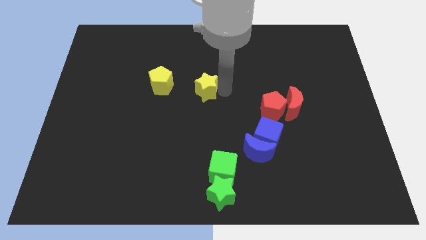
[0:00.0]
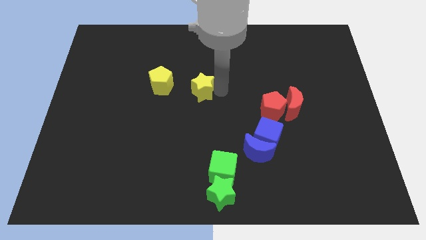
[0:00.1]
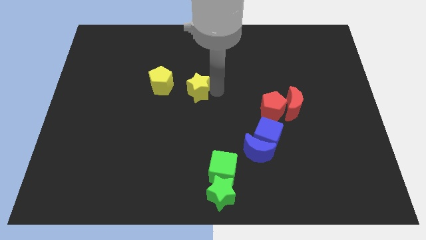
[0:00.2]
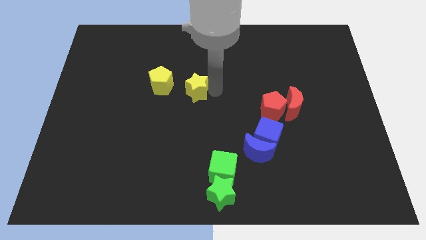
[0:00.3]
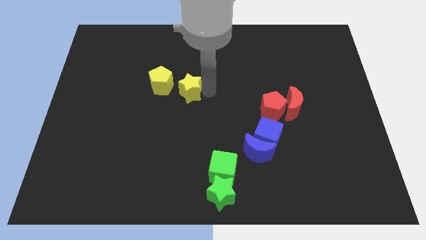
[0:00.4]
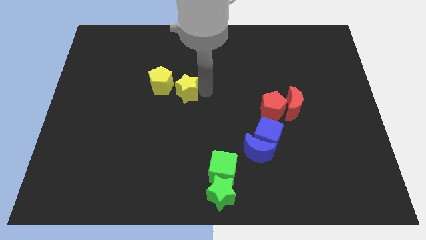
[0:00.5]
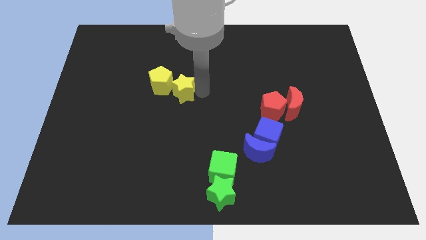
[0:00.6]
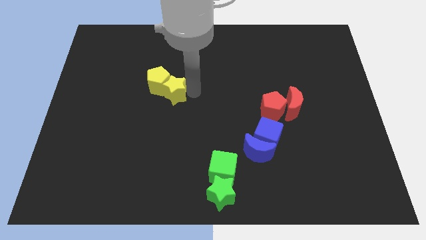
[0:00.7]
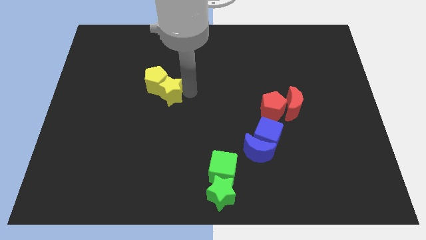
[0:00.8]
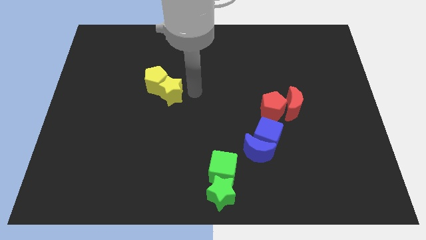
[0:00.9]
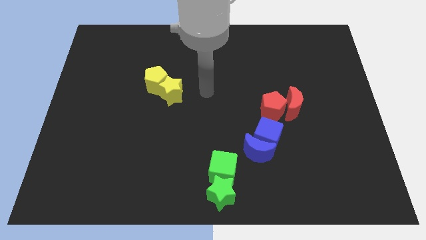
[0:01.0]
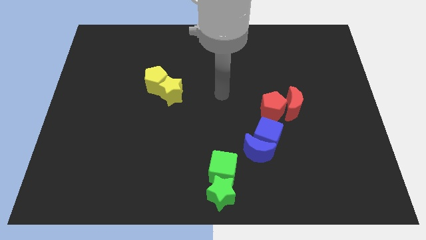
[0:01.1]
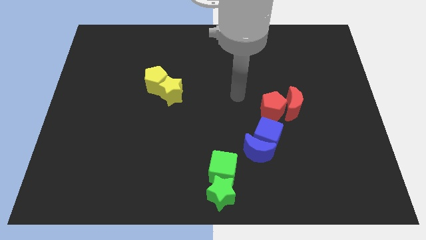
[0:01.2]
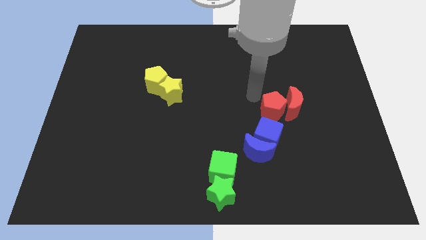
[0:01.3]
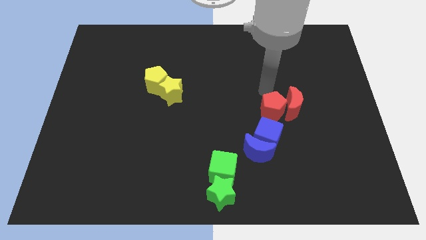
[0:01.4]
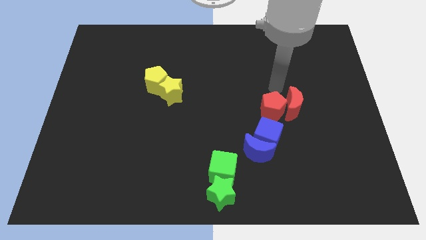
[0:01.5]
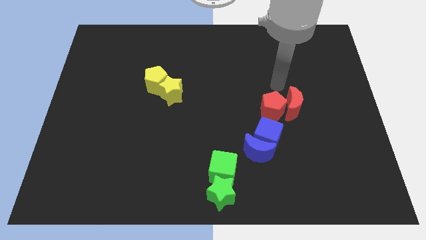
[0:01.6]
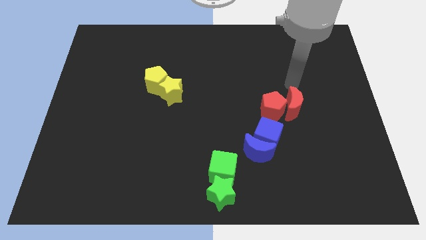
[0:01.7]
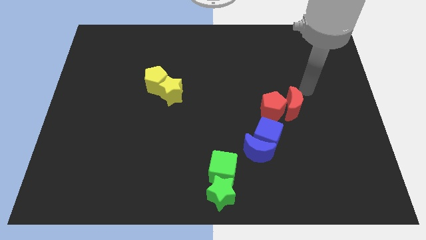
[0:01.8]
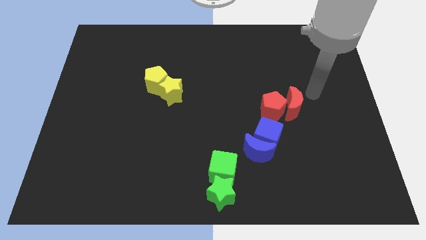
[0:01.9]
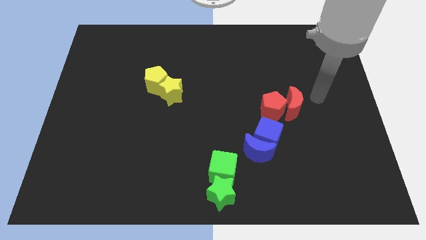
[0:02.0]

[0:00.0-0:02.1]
put the yellow star into the yellow pentagon

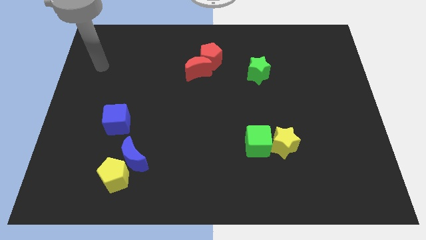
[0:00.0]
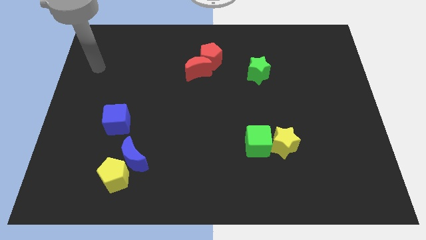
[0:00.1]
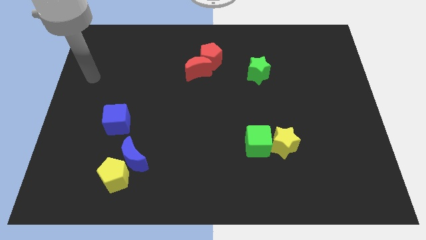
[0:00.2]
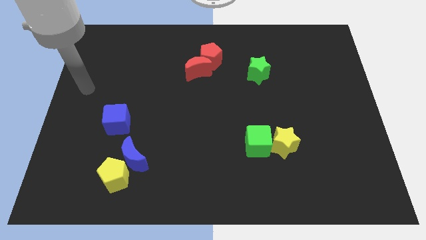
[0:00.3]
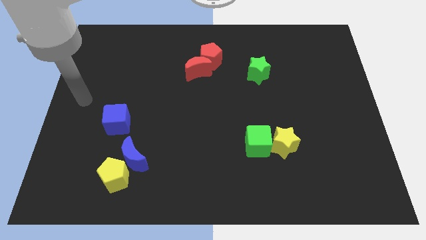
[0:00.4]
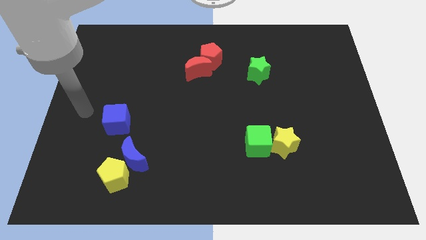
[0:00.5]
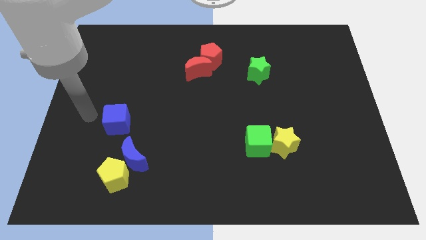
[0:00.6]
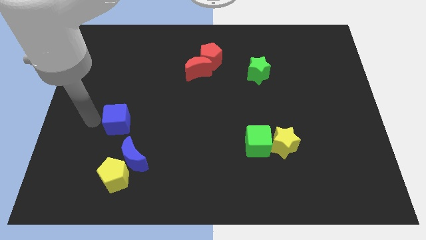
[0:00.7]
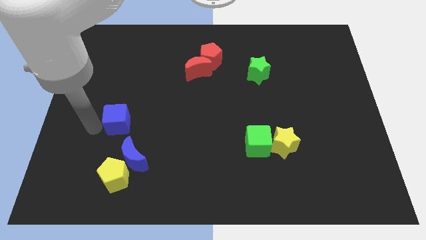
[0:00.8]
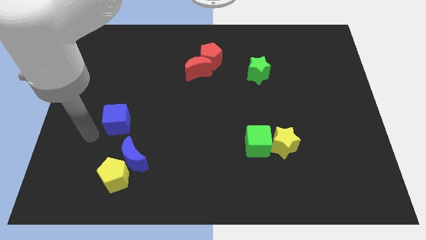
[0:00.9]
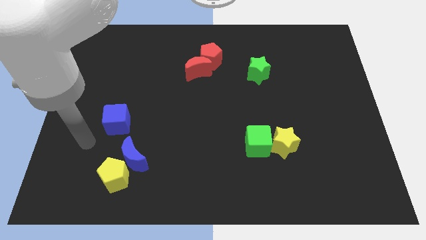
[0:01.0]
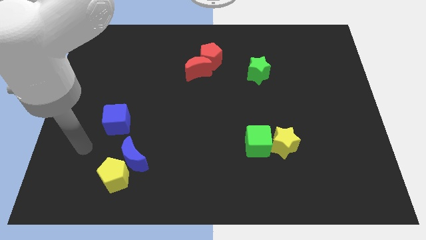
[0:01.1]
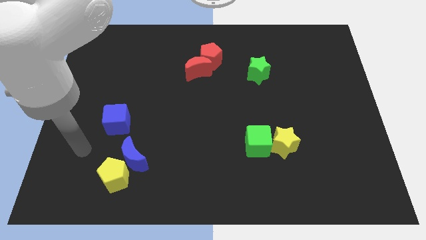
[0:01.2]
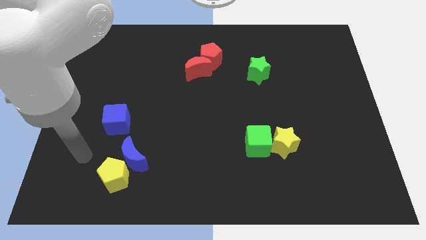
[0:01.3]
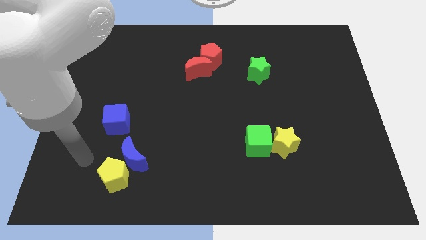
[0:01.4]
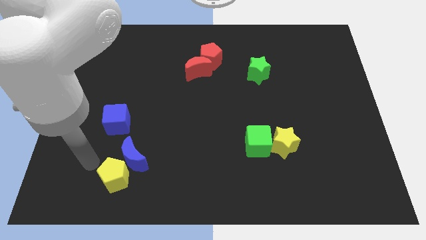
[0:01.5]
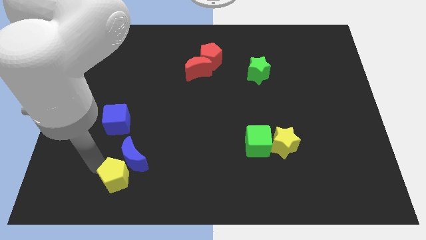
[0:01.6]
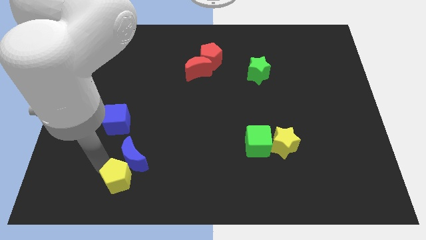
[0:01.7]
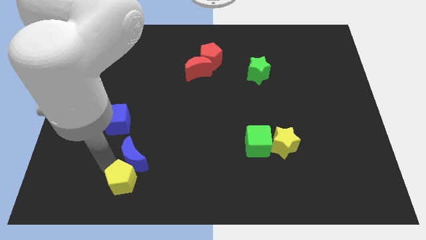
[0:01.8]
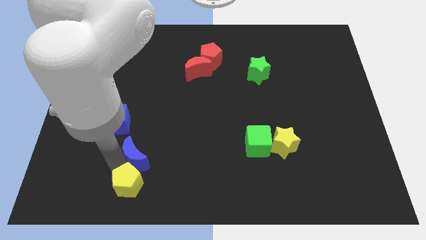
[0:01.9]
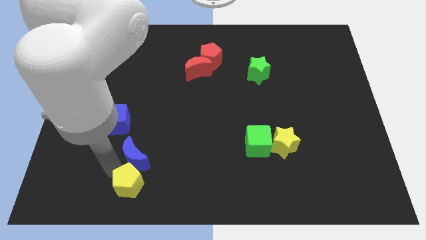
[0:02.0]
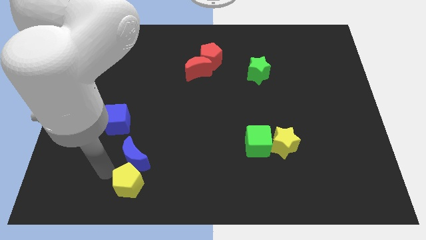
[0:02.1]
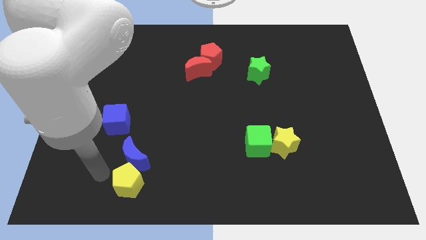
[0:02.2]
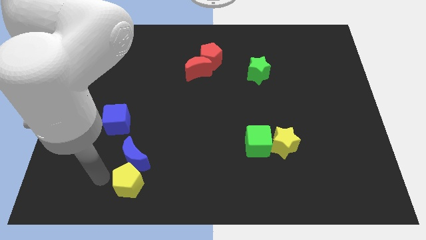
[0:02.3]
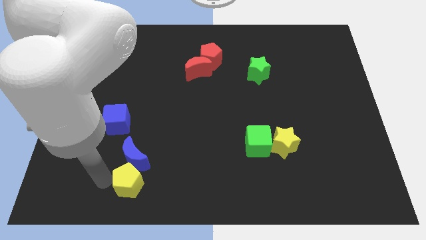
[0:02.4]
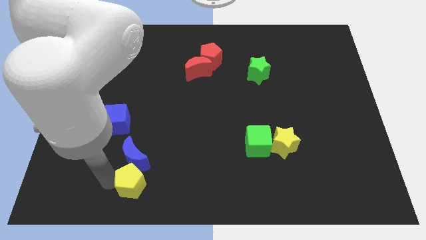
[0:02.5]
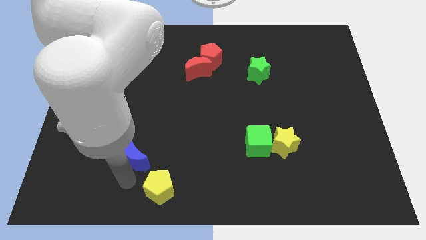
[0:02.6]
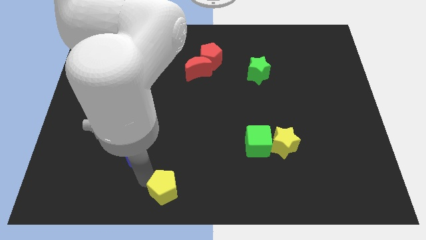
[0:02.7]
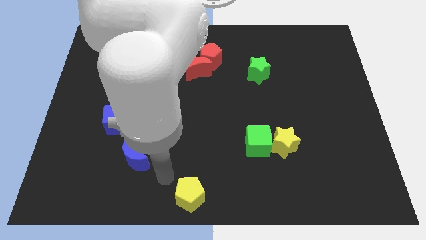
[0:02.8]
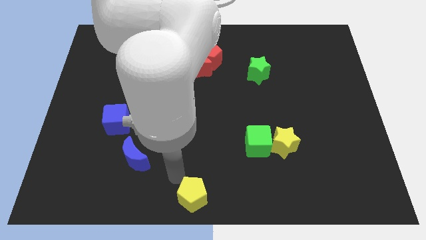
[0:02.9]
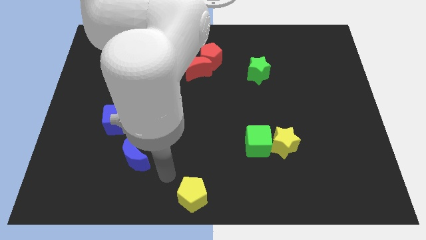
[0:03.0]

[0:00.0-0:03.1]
place the yellow pentagon below the blue moon

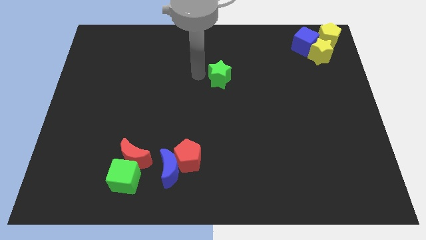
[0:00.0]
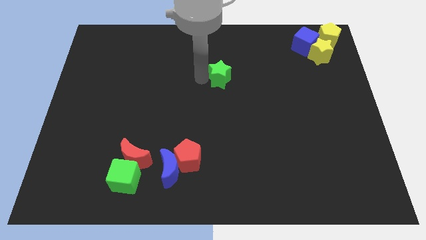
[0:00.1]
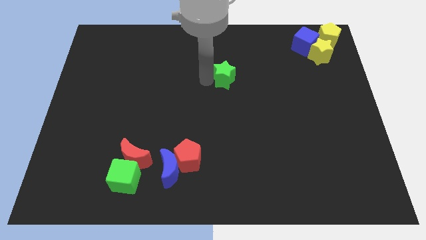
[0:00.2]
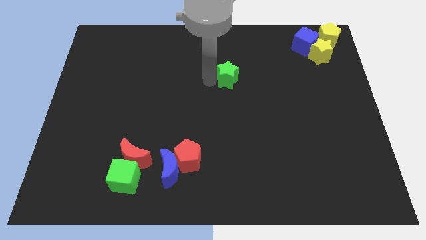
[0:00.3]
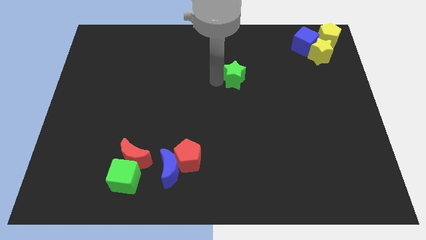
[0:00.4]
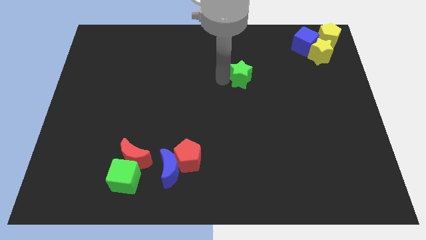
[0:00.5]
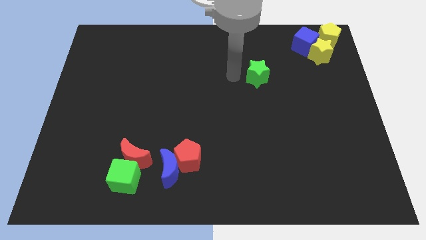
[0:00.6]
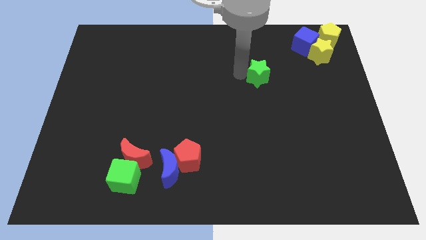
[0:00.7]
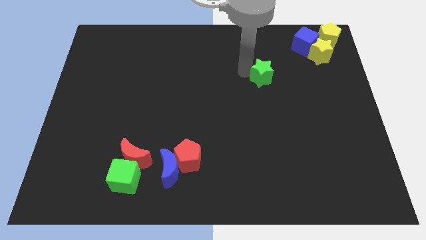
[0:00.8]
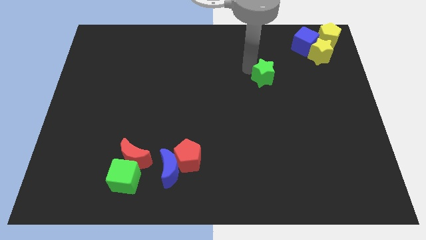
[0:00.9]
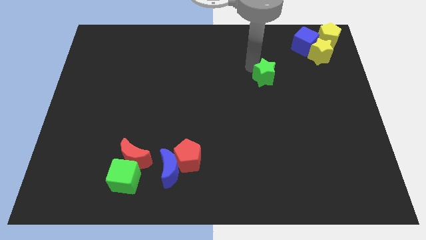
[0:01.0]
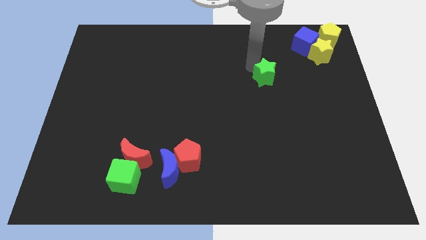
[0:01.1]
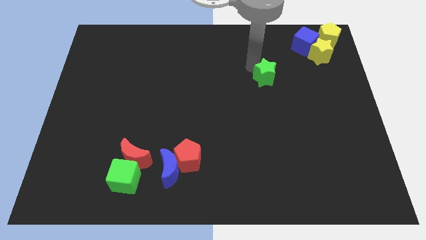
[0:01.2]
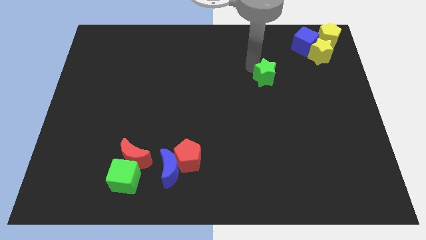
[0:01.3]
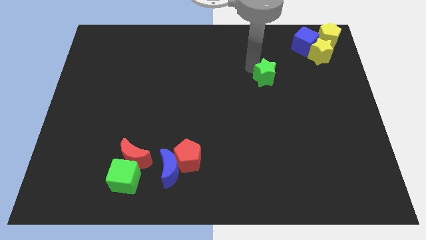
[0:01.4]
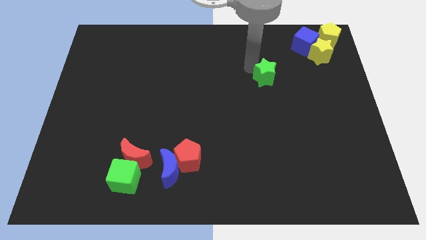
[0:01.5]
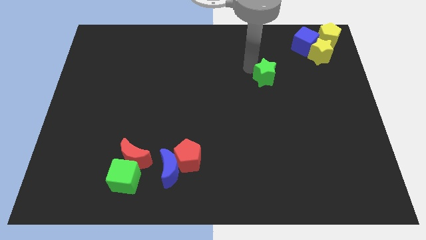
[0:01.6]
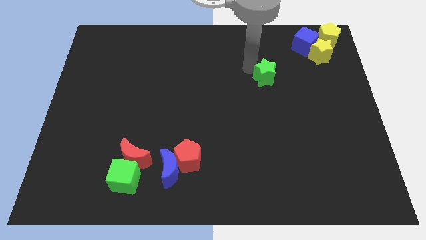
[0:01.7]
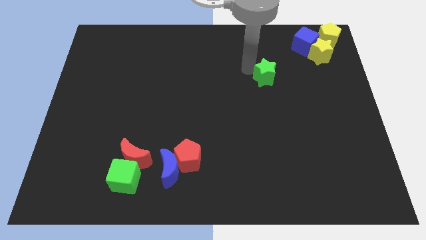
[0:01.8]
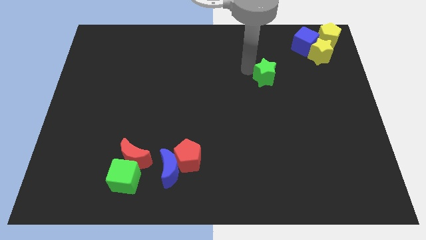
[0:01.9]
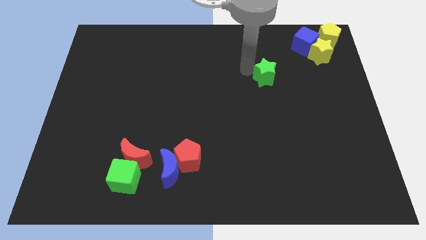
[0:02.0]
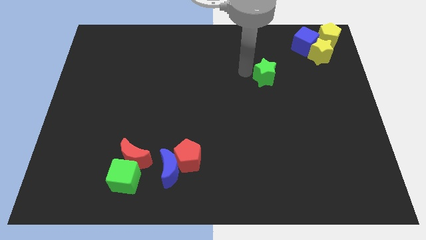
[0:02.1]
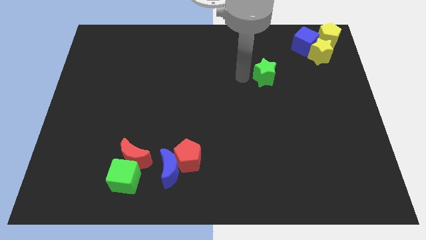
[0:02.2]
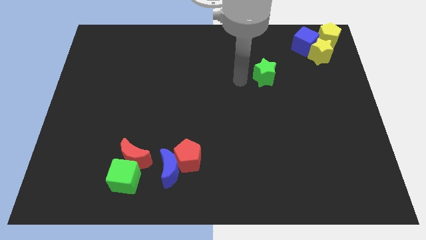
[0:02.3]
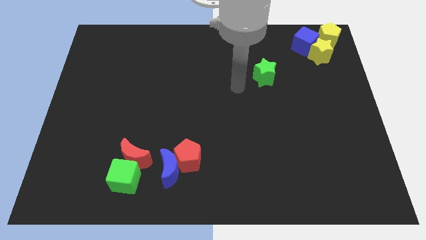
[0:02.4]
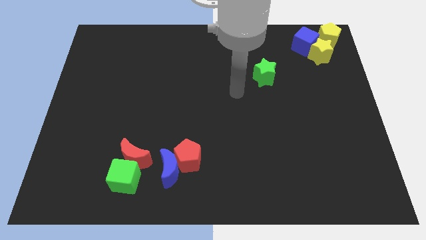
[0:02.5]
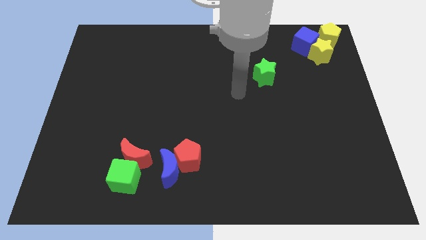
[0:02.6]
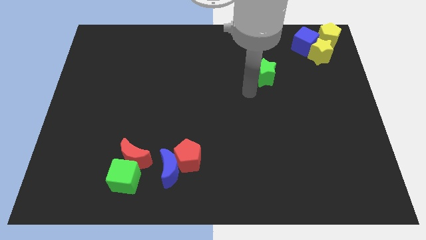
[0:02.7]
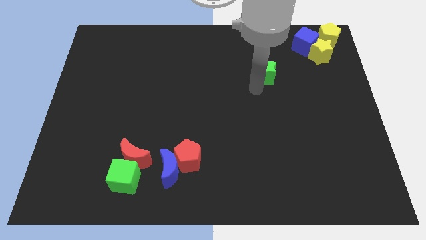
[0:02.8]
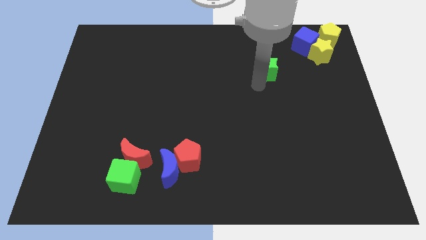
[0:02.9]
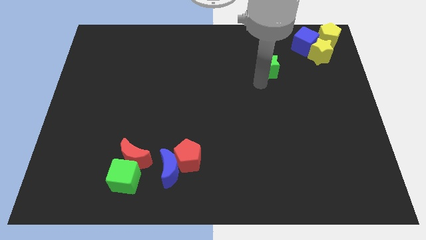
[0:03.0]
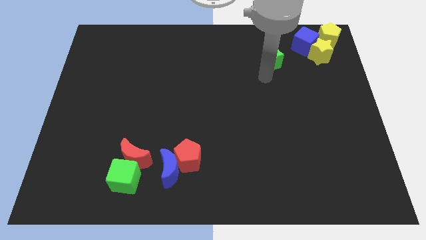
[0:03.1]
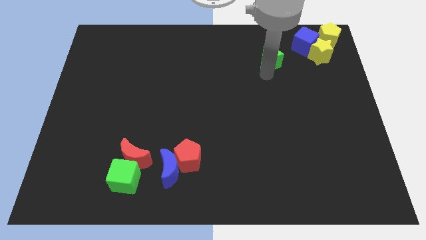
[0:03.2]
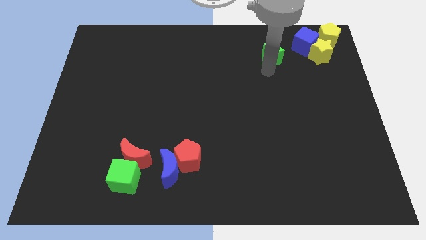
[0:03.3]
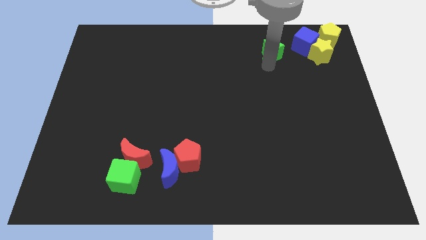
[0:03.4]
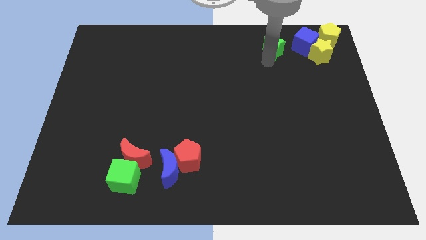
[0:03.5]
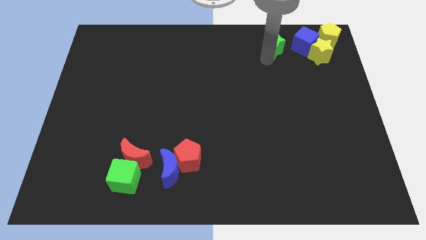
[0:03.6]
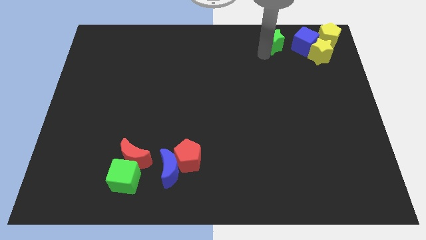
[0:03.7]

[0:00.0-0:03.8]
push green star towards blue cube

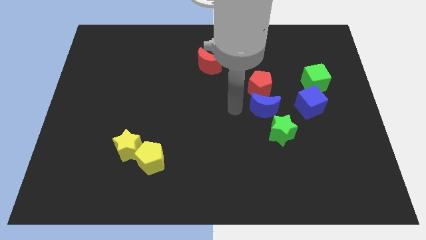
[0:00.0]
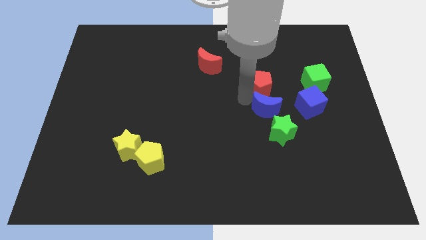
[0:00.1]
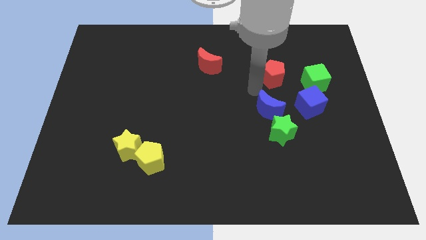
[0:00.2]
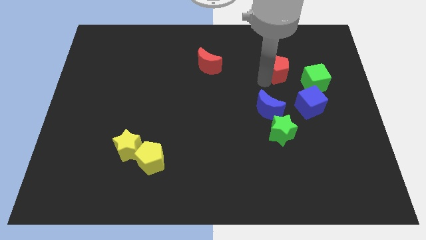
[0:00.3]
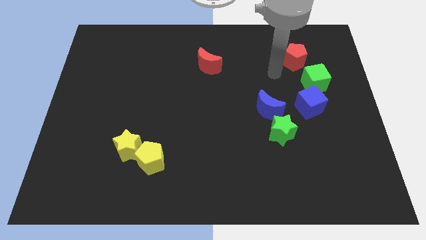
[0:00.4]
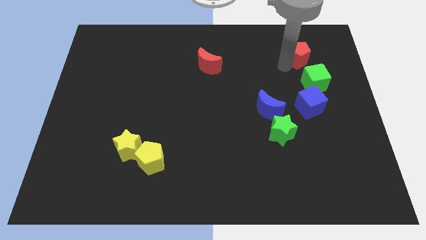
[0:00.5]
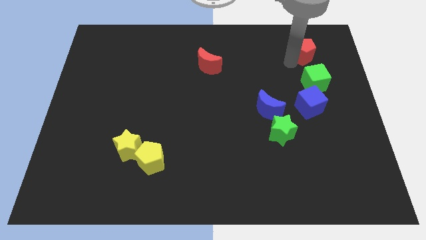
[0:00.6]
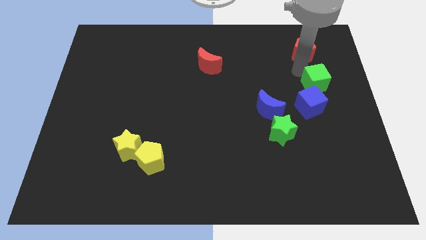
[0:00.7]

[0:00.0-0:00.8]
place the red pentagon right to the red moon
